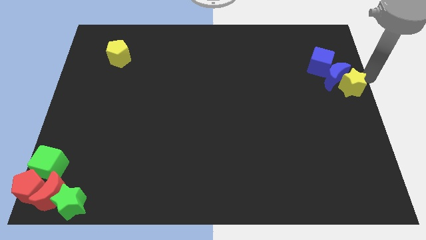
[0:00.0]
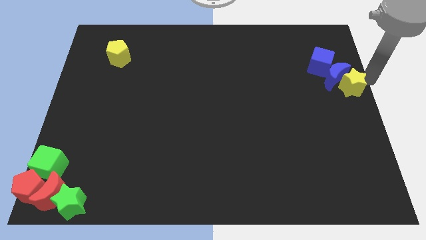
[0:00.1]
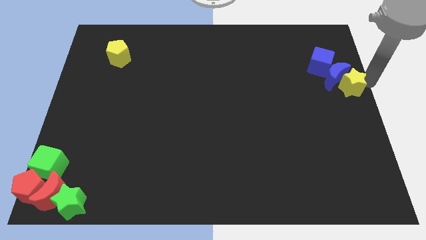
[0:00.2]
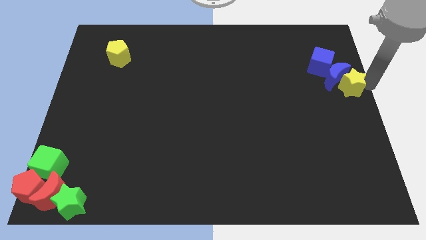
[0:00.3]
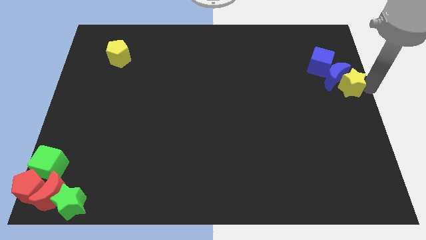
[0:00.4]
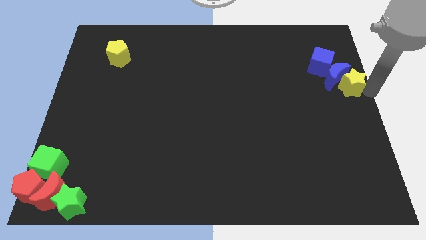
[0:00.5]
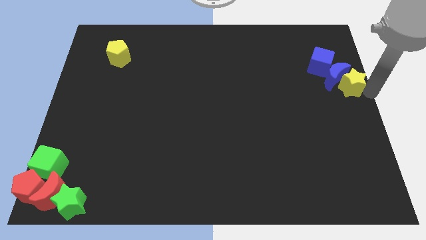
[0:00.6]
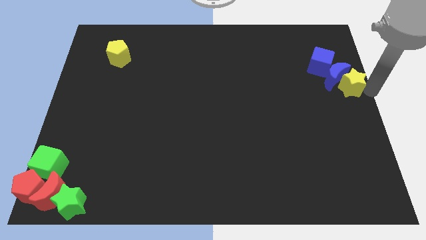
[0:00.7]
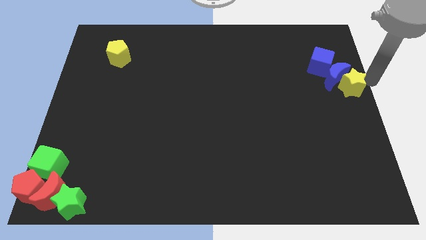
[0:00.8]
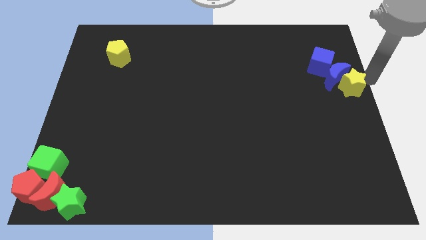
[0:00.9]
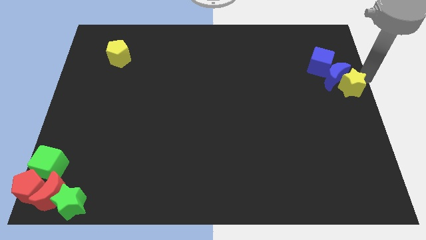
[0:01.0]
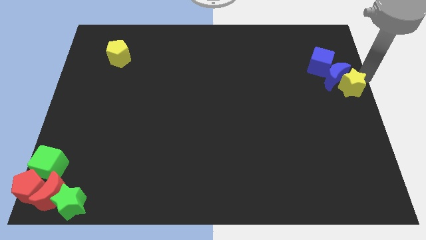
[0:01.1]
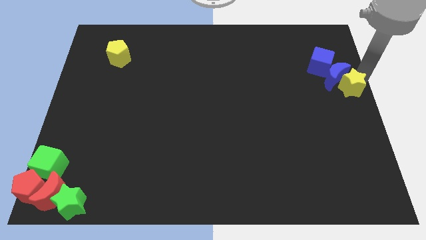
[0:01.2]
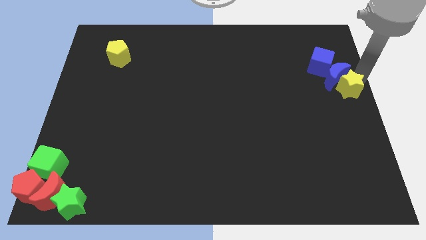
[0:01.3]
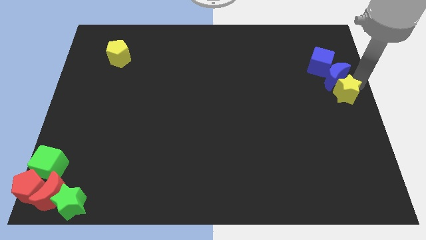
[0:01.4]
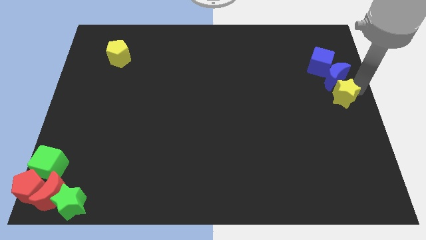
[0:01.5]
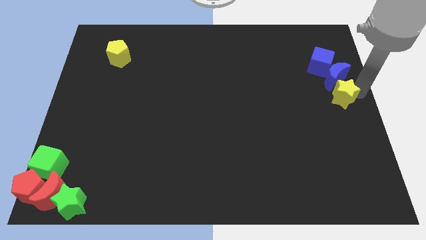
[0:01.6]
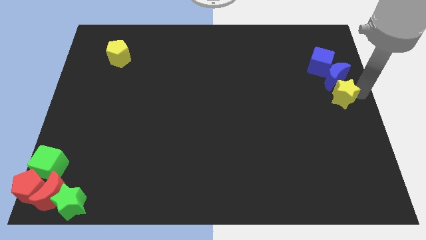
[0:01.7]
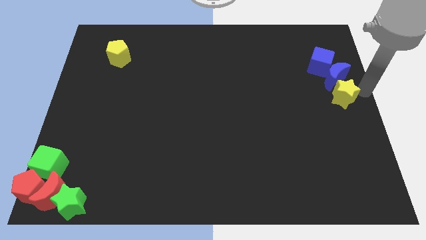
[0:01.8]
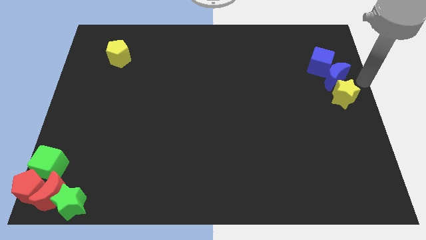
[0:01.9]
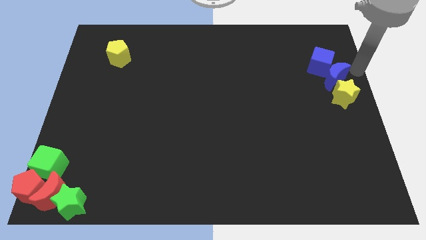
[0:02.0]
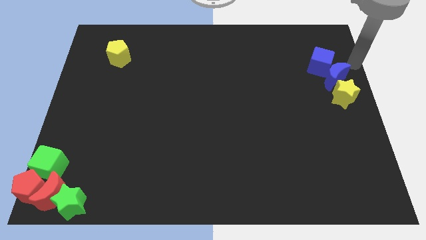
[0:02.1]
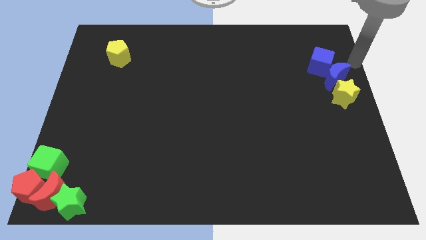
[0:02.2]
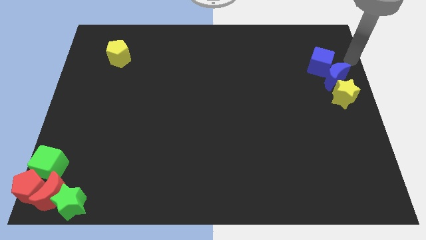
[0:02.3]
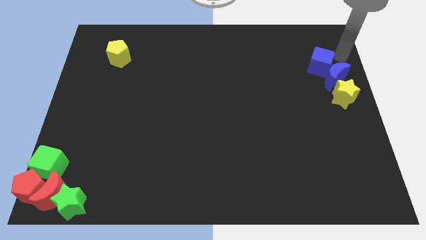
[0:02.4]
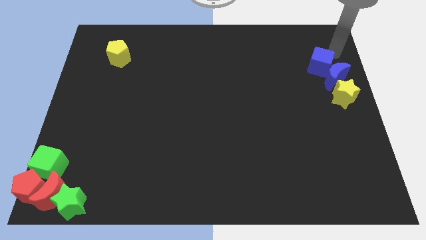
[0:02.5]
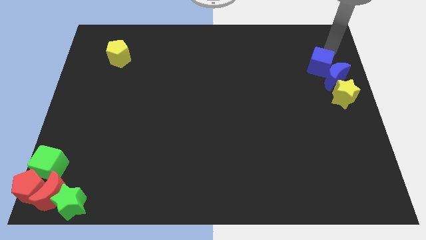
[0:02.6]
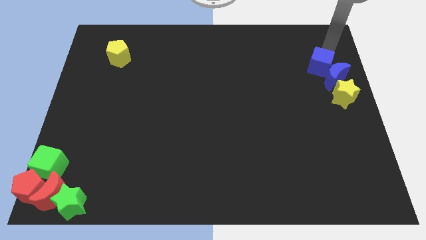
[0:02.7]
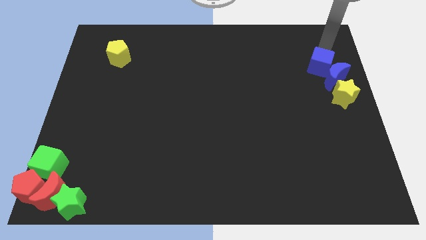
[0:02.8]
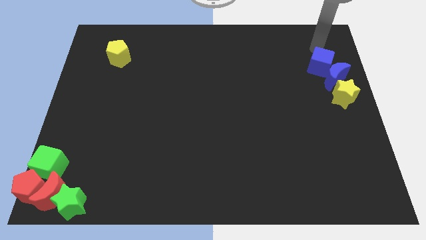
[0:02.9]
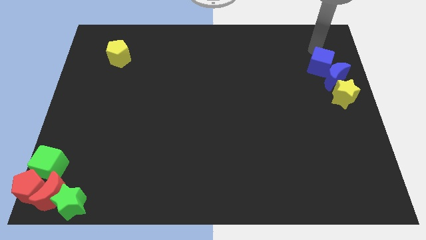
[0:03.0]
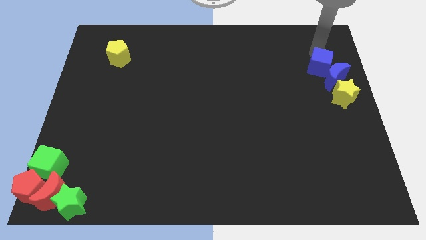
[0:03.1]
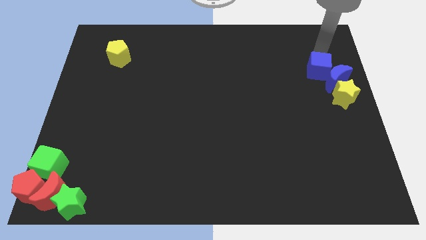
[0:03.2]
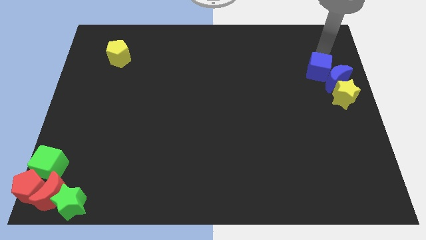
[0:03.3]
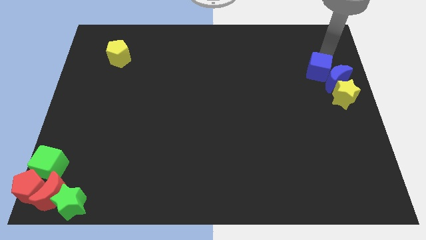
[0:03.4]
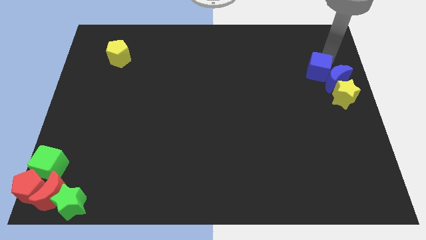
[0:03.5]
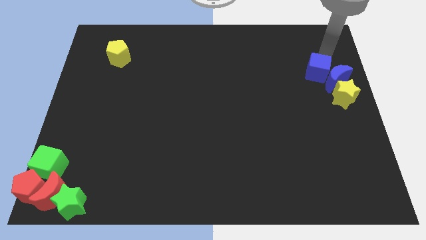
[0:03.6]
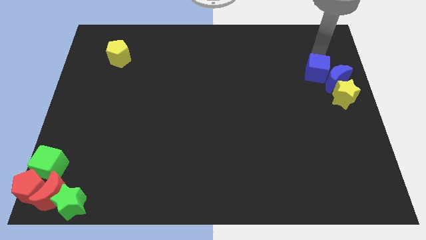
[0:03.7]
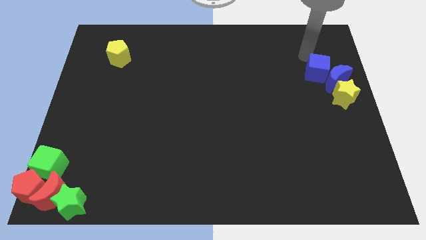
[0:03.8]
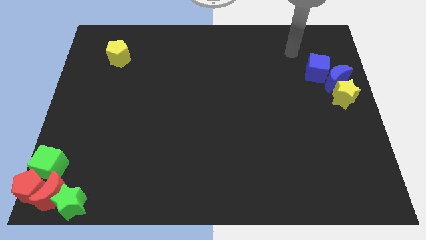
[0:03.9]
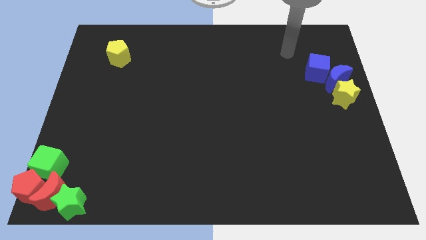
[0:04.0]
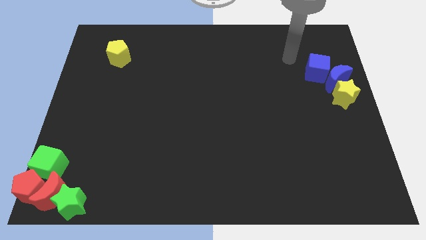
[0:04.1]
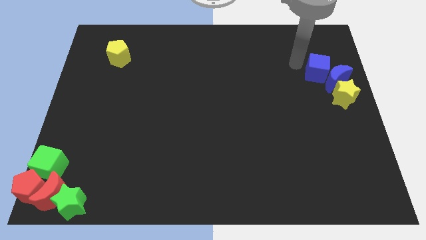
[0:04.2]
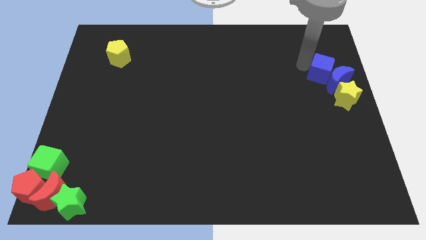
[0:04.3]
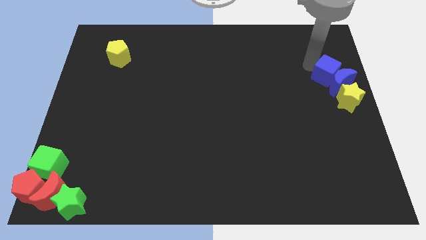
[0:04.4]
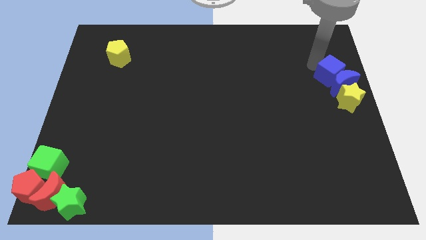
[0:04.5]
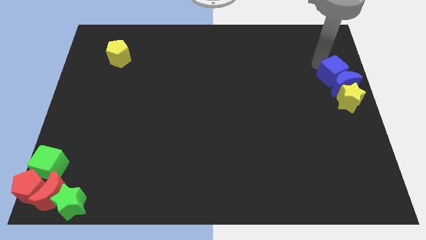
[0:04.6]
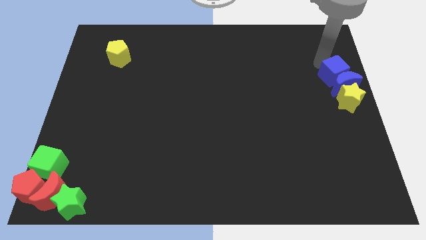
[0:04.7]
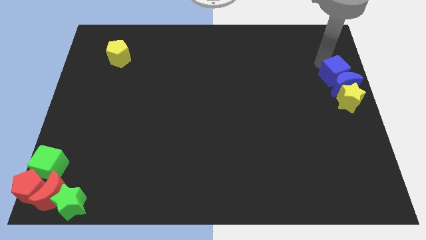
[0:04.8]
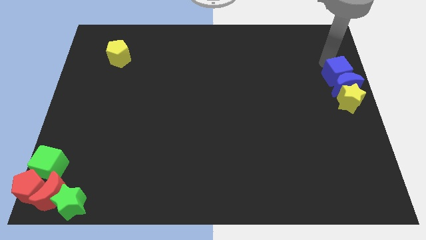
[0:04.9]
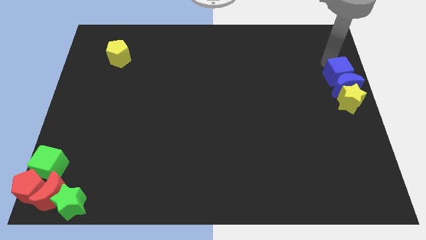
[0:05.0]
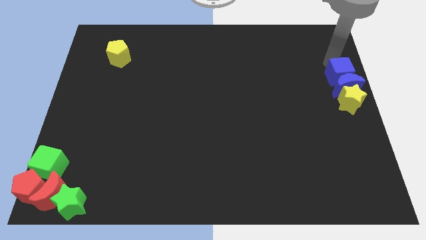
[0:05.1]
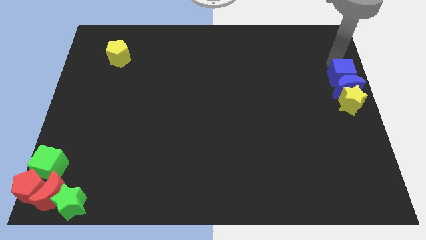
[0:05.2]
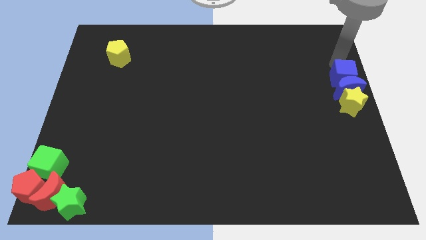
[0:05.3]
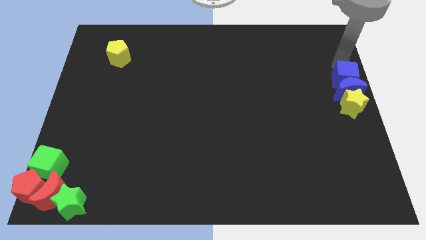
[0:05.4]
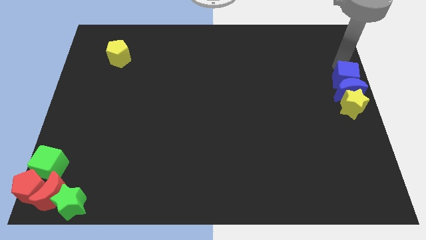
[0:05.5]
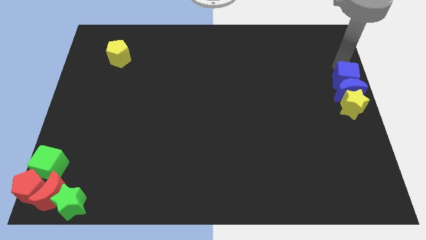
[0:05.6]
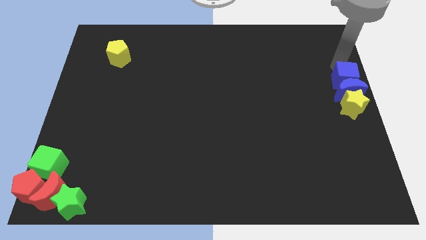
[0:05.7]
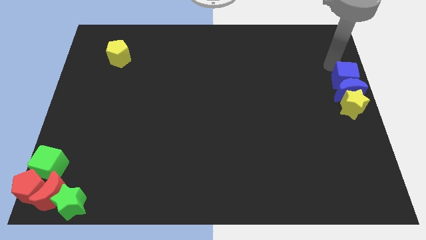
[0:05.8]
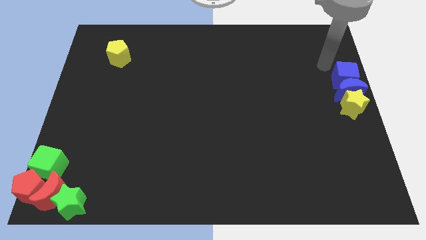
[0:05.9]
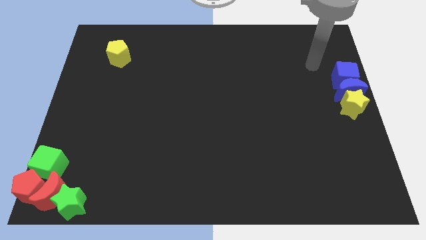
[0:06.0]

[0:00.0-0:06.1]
arrange the blue cube blue crescent and yellow star in a row along the right side edge of the board

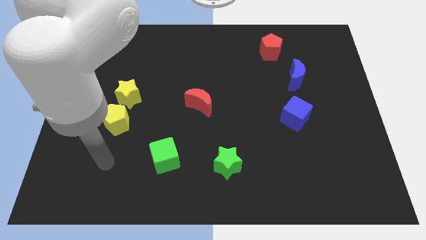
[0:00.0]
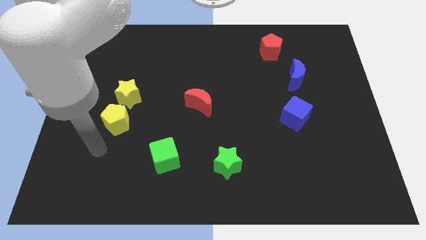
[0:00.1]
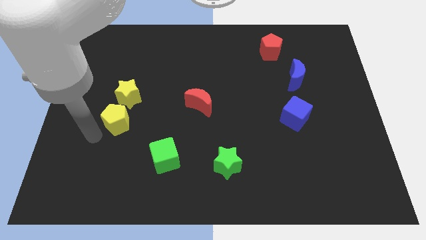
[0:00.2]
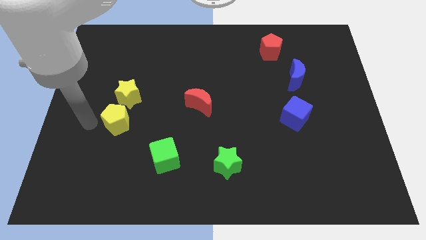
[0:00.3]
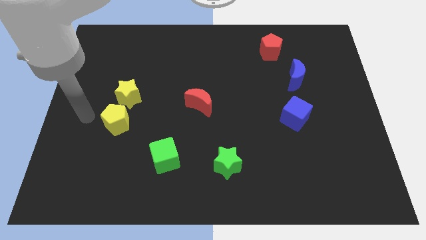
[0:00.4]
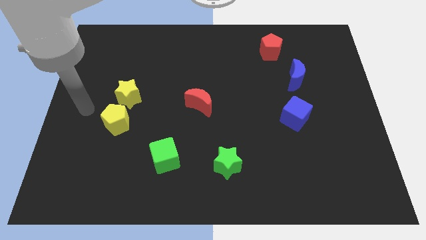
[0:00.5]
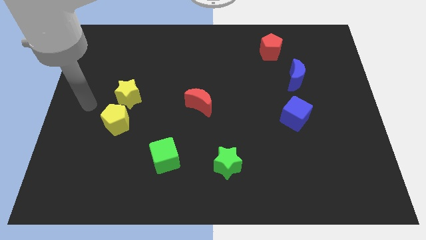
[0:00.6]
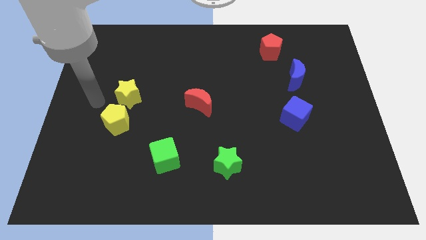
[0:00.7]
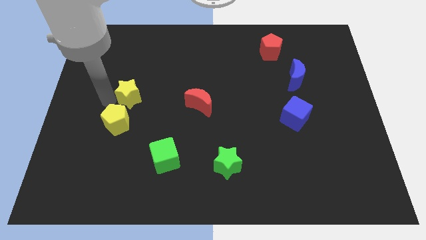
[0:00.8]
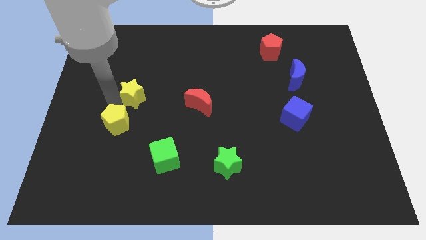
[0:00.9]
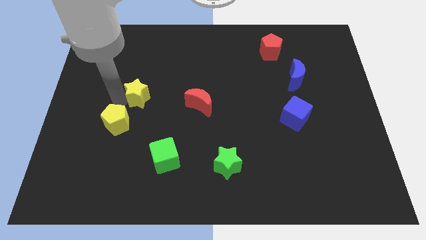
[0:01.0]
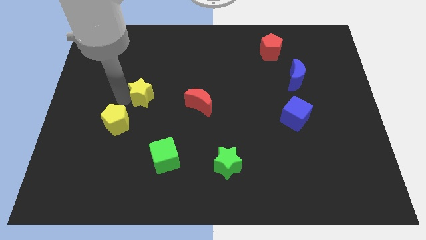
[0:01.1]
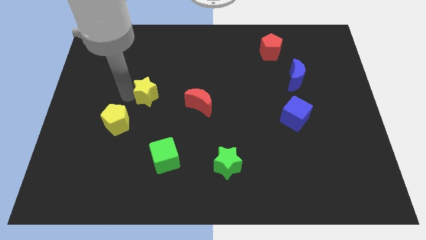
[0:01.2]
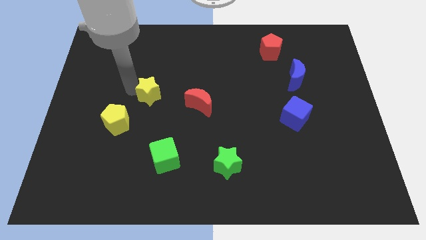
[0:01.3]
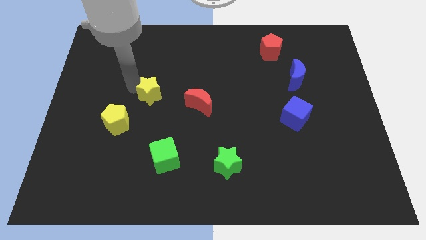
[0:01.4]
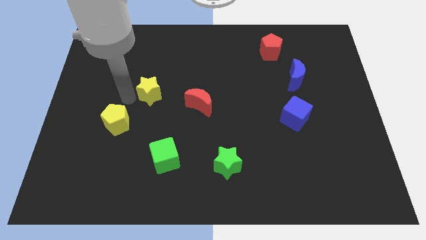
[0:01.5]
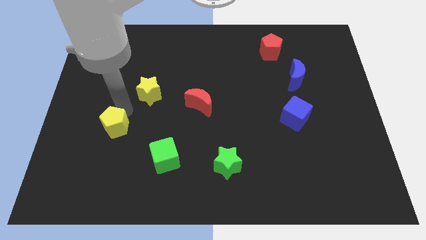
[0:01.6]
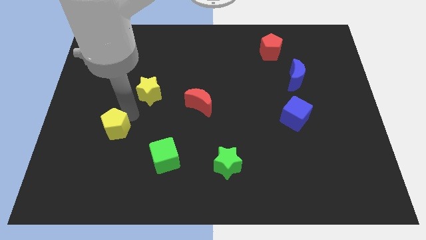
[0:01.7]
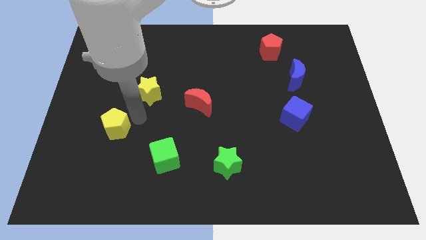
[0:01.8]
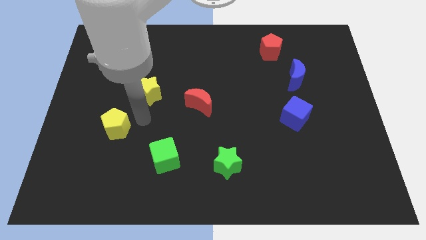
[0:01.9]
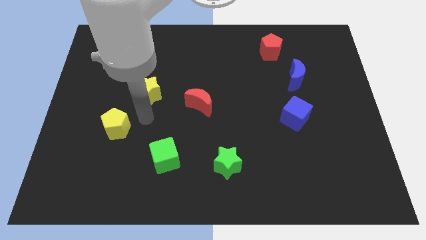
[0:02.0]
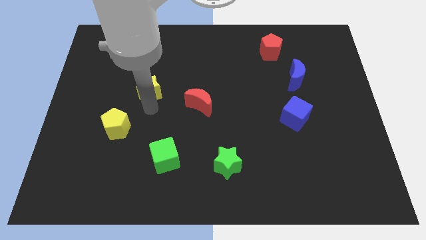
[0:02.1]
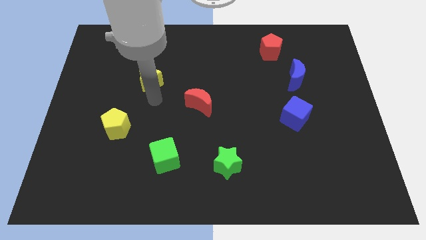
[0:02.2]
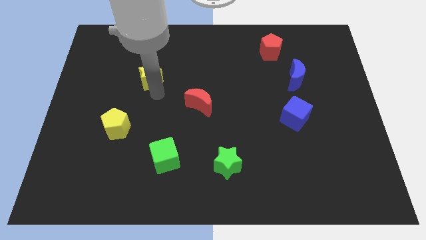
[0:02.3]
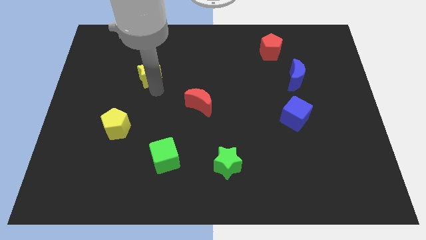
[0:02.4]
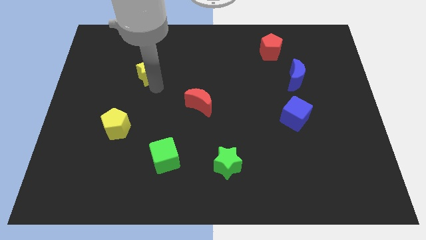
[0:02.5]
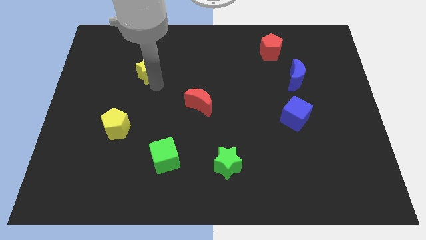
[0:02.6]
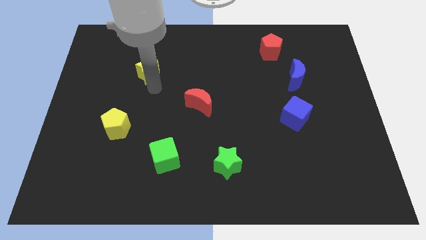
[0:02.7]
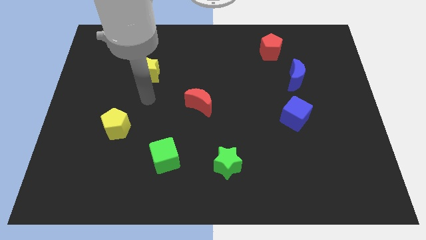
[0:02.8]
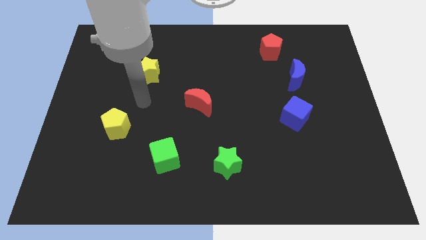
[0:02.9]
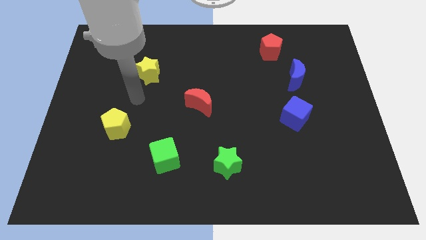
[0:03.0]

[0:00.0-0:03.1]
separate the yellow blocks each others
